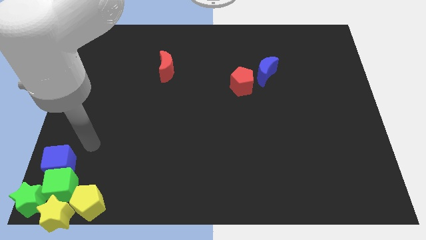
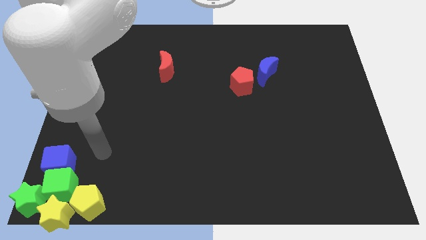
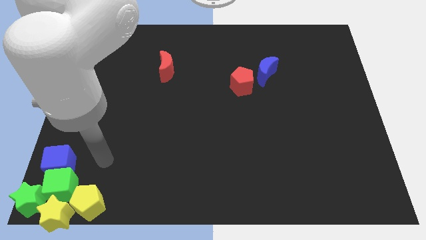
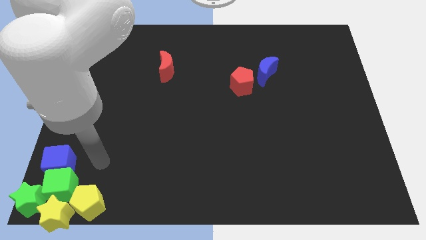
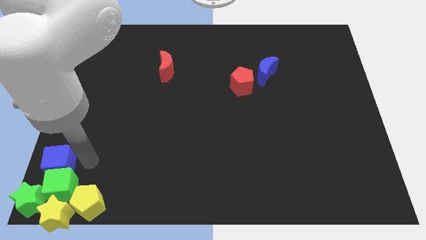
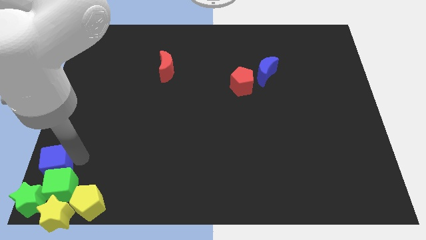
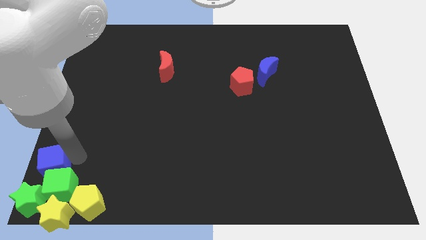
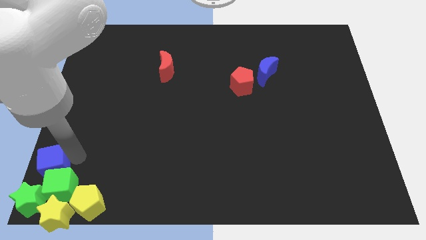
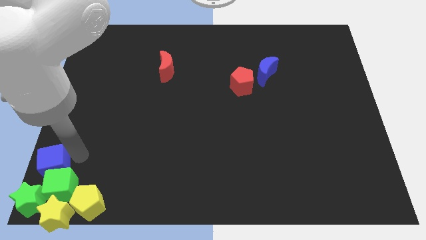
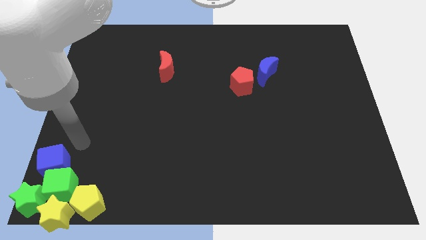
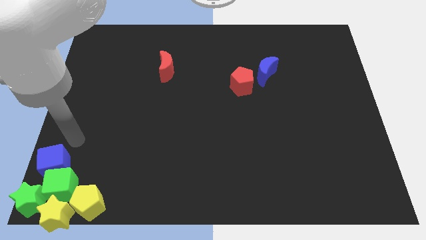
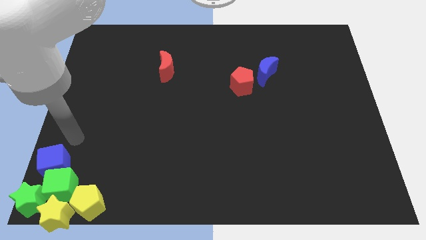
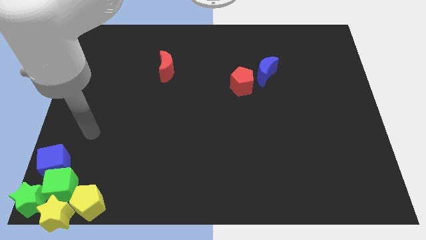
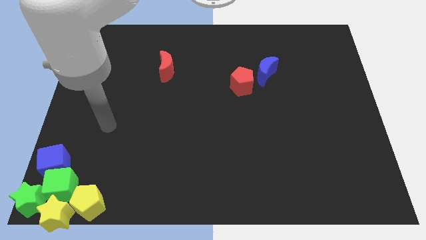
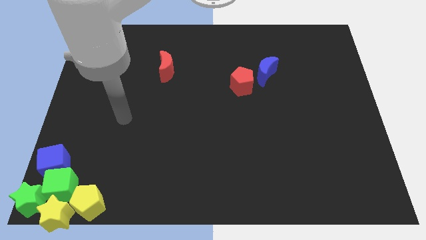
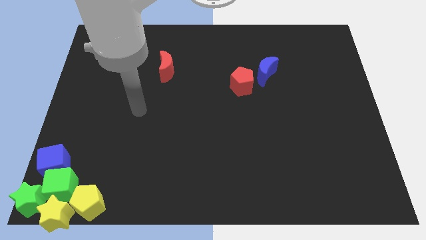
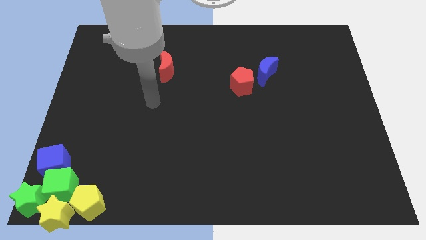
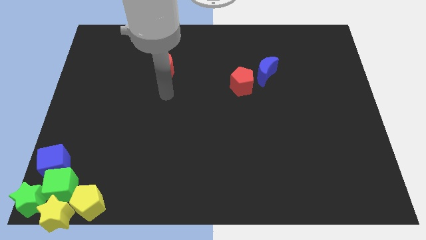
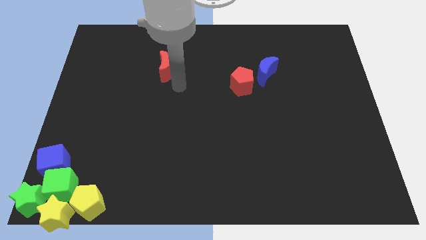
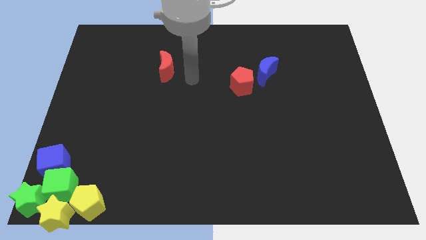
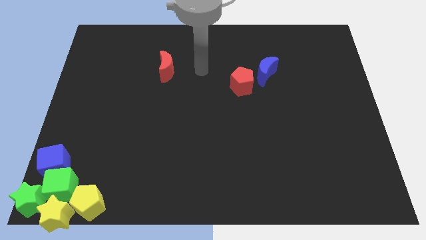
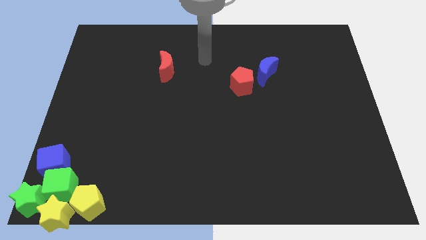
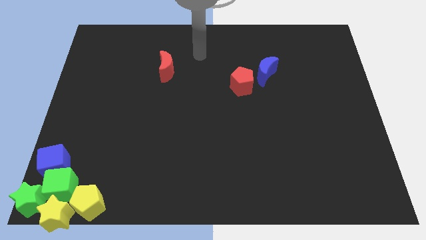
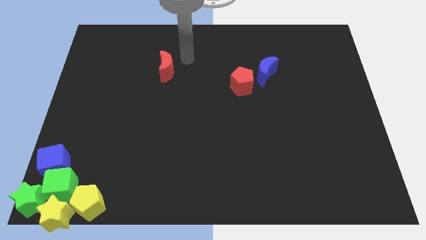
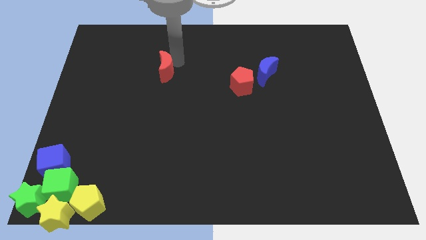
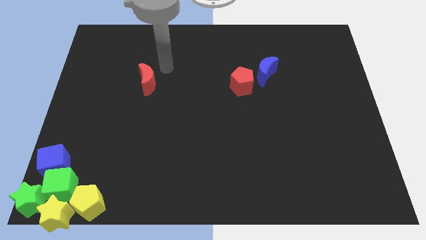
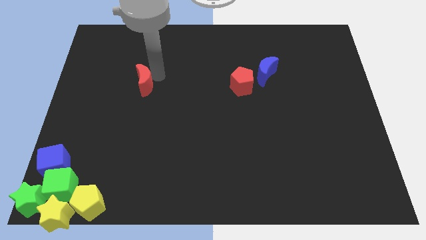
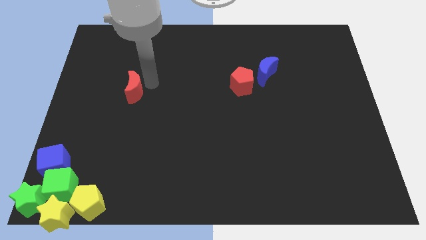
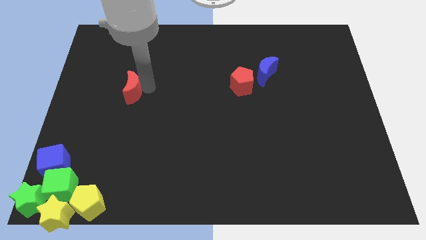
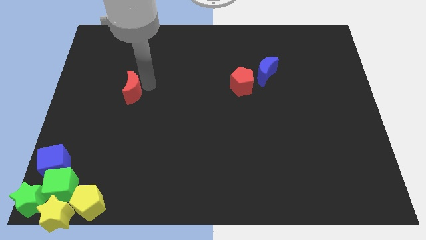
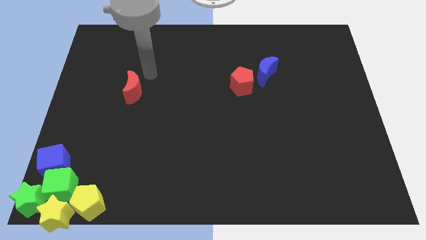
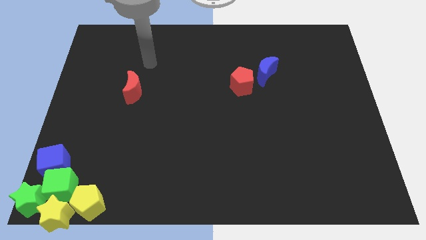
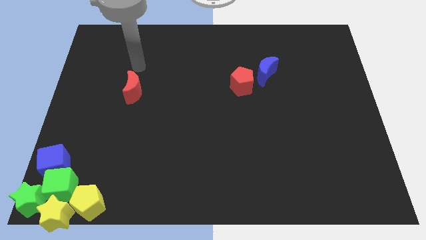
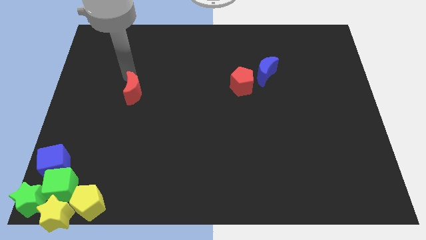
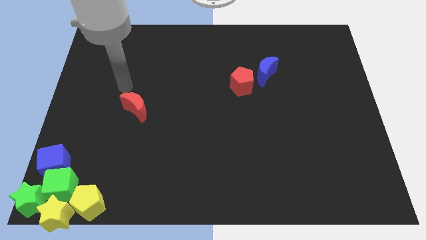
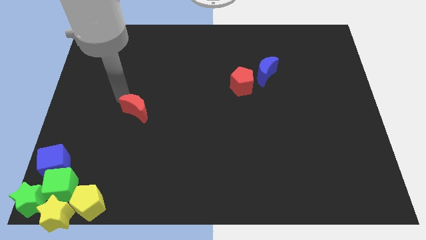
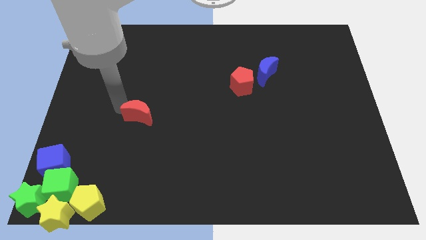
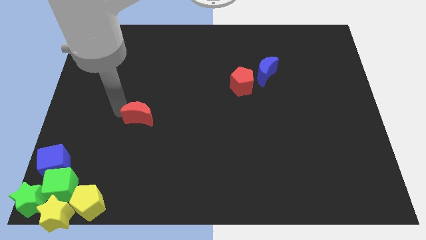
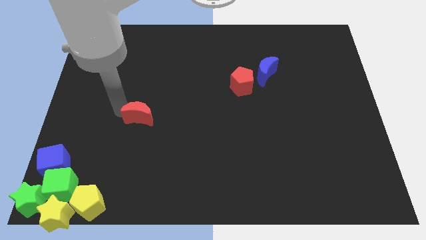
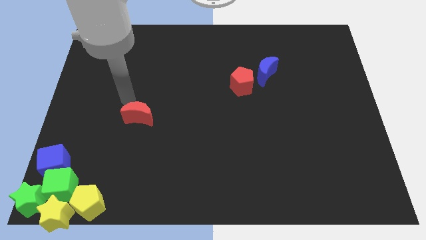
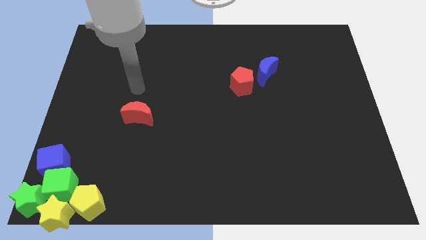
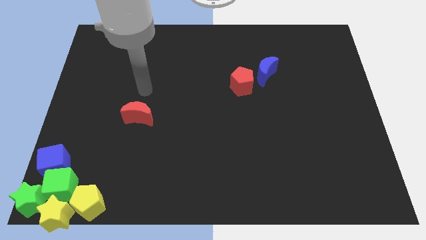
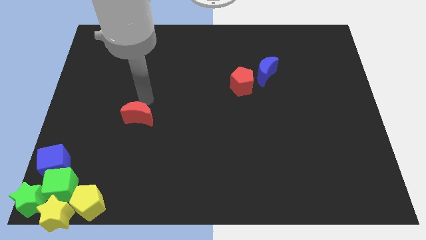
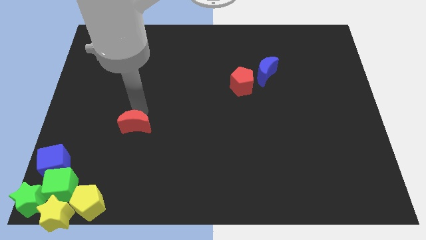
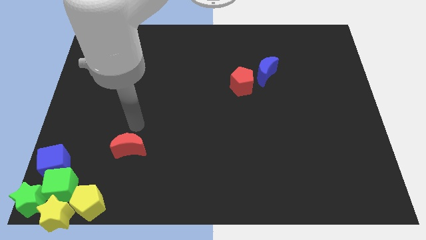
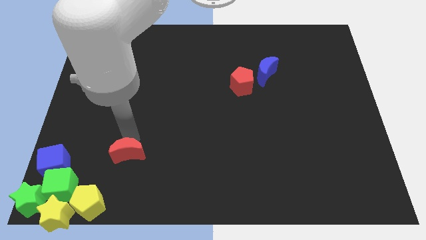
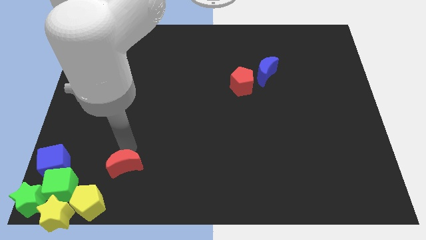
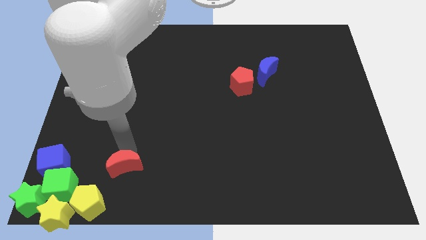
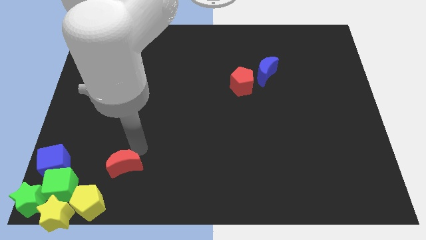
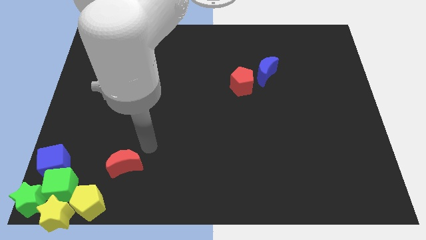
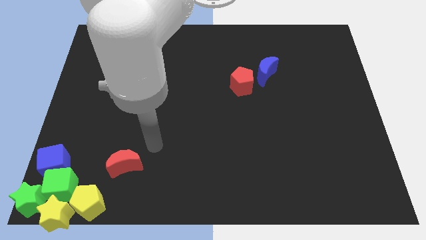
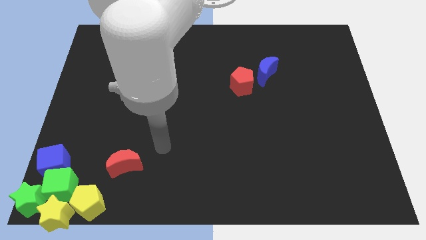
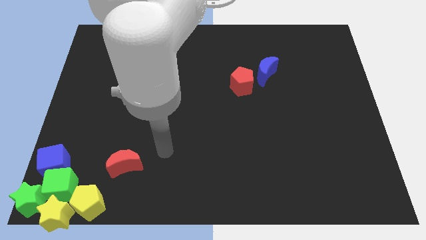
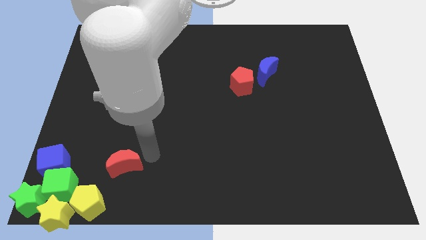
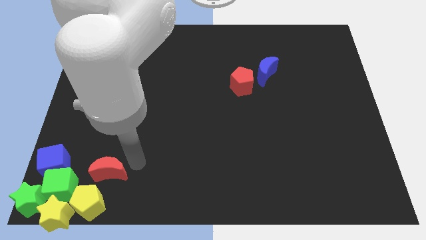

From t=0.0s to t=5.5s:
push the red moon close to the yellow pentagon

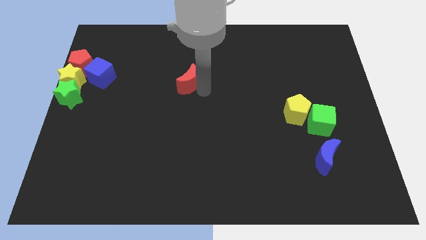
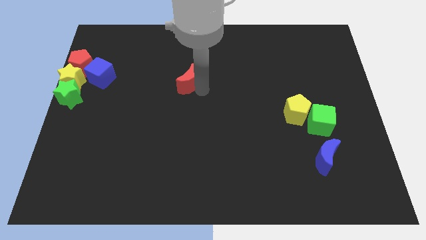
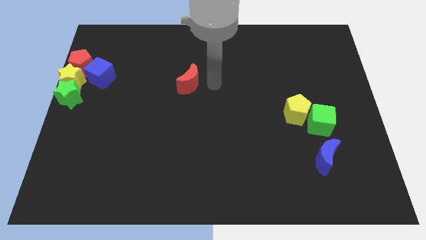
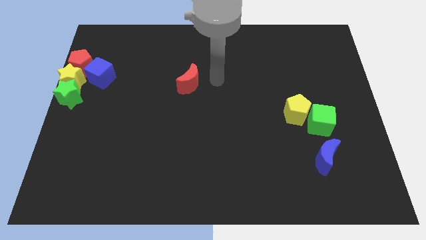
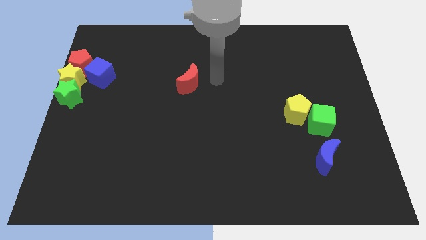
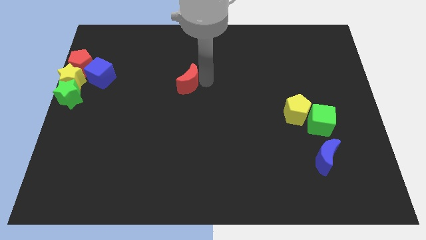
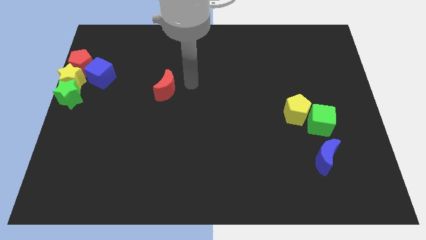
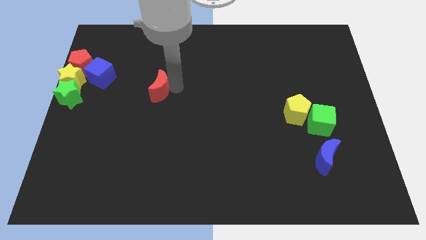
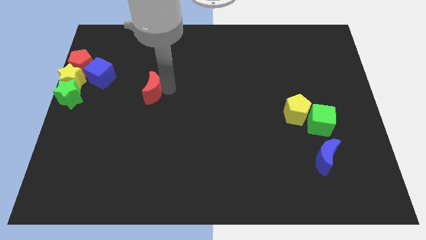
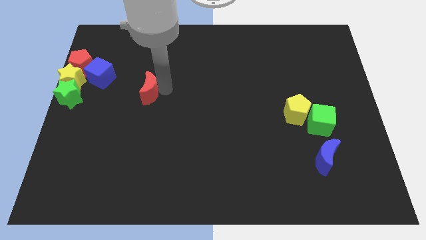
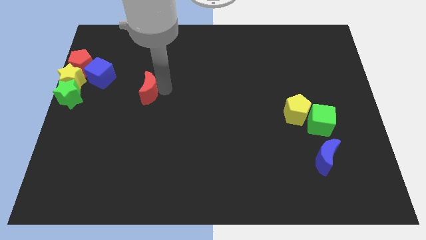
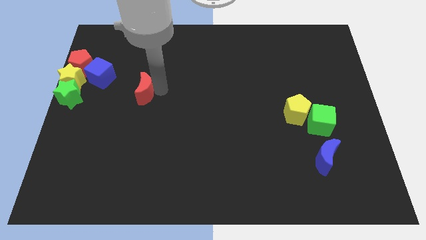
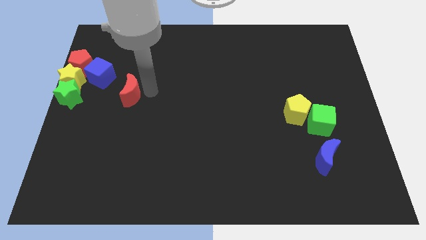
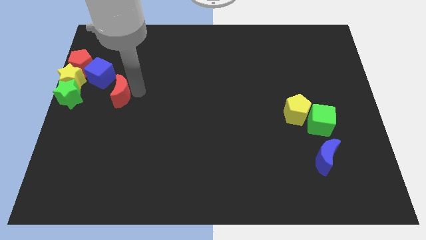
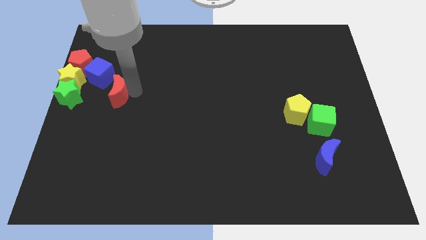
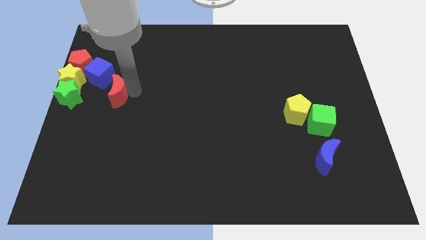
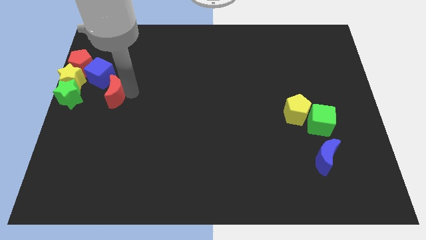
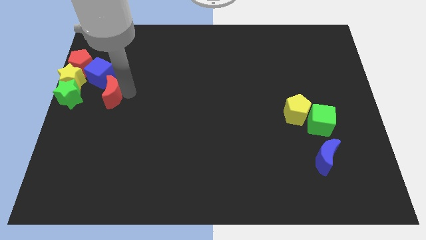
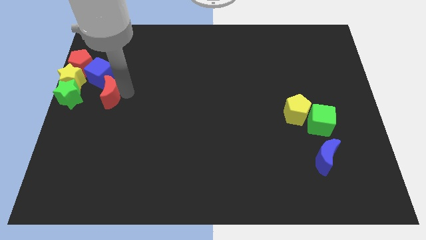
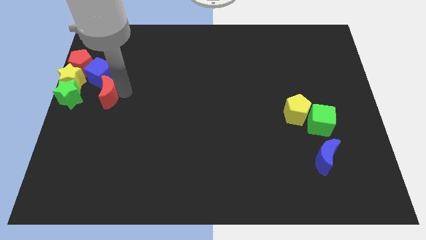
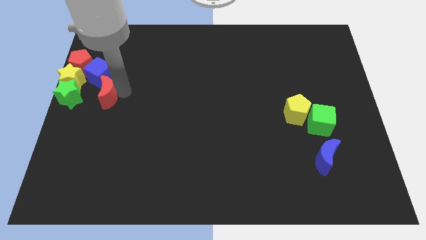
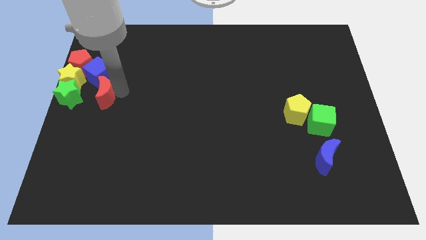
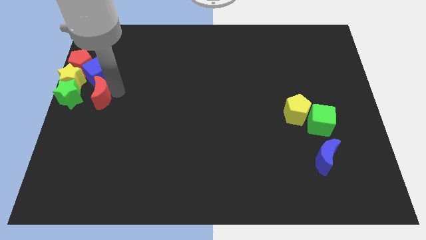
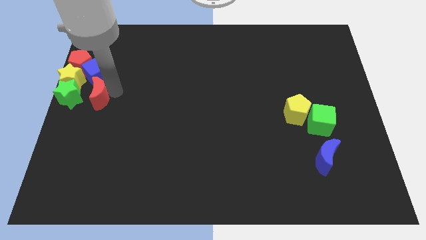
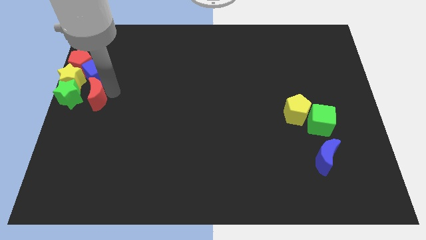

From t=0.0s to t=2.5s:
move the red moon below the blue cube

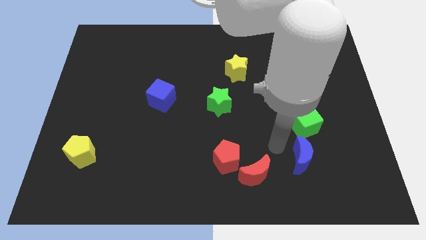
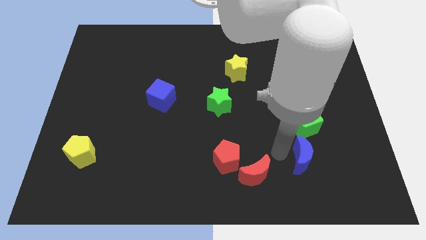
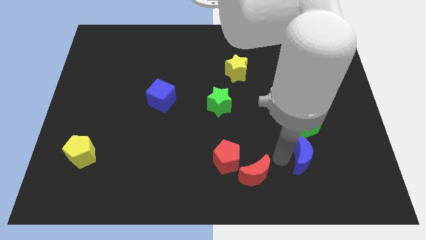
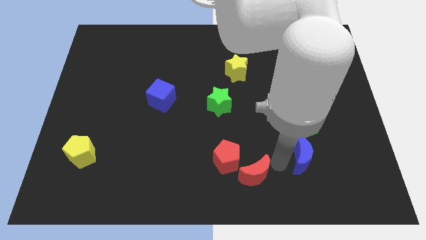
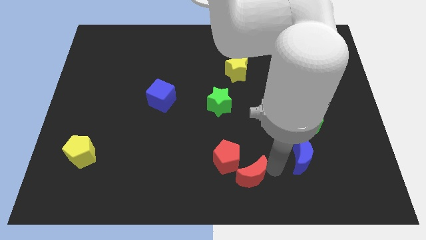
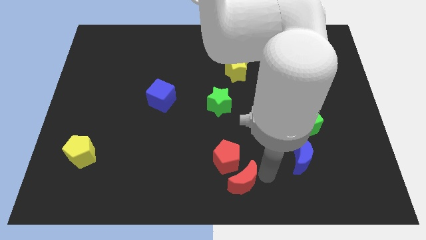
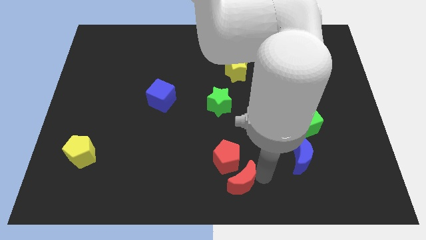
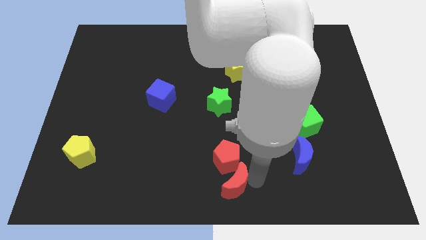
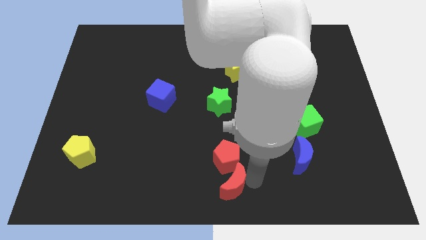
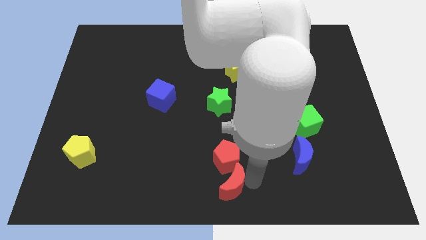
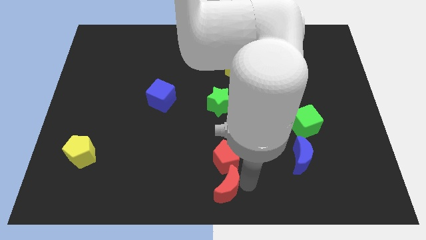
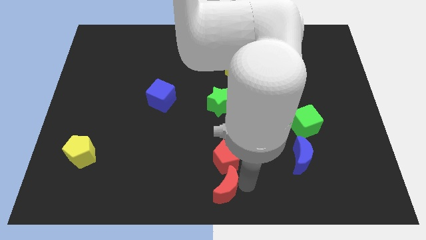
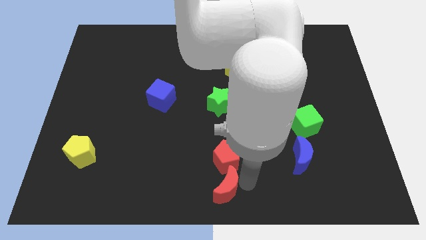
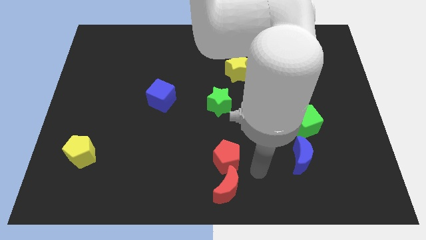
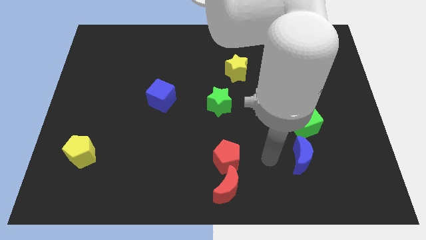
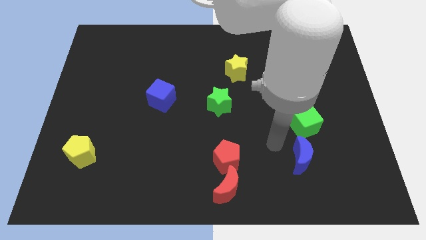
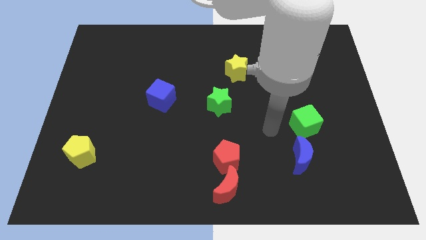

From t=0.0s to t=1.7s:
place the red moon to the bottom of the red pentagon
